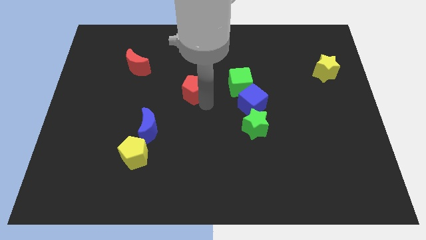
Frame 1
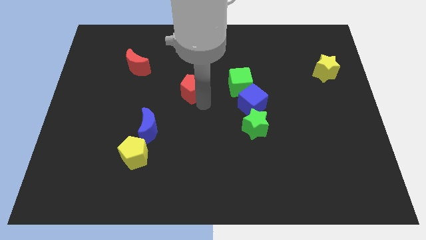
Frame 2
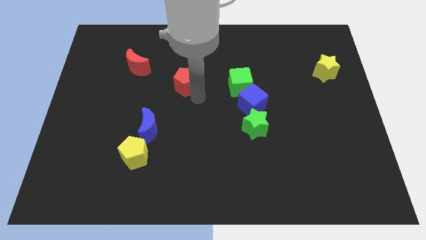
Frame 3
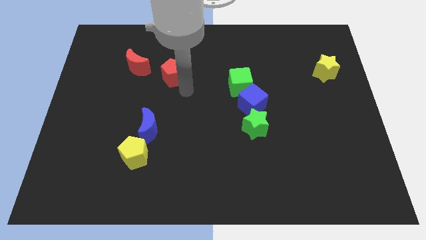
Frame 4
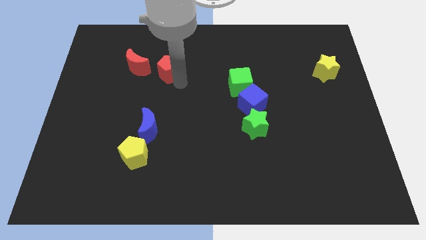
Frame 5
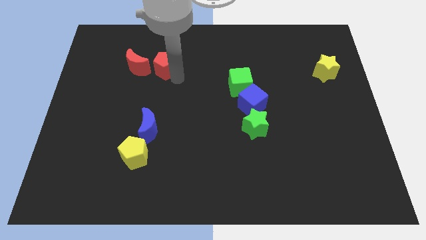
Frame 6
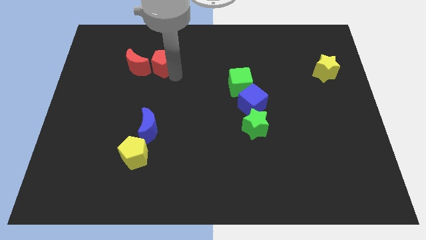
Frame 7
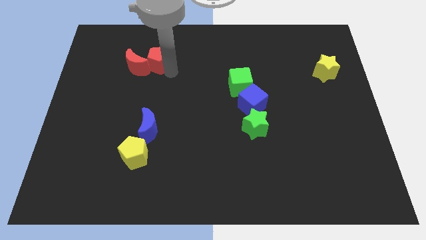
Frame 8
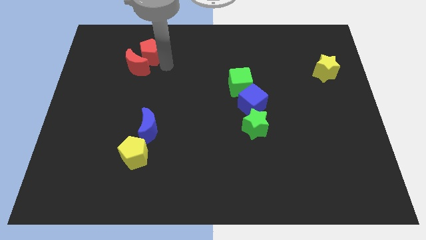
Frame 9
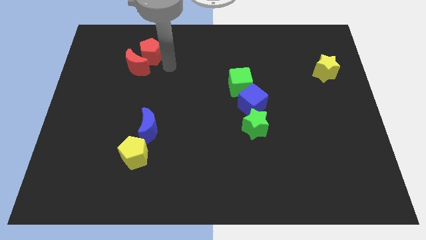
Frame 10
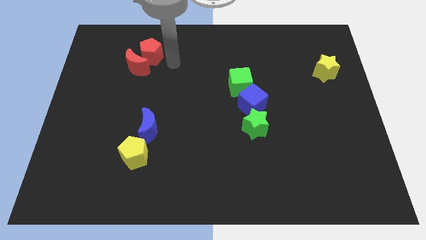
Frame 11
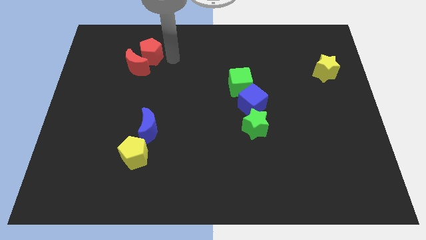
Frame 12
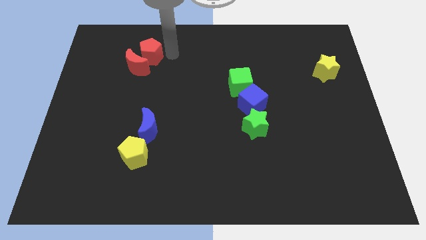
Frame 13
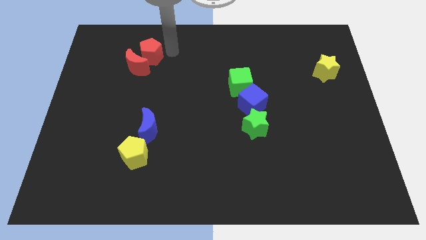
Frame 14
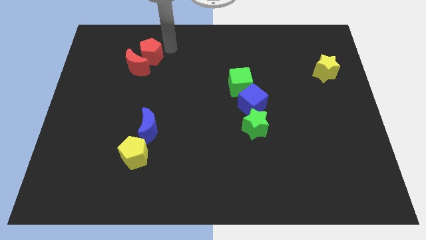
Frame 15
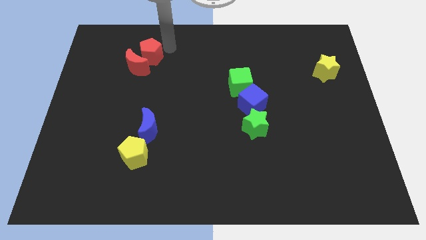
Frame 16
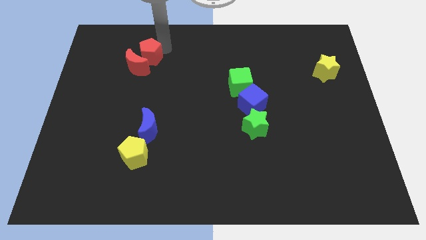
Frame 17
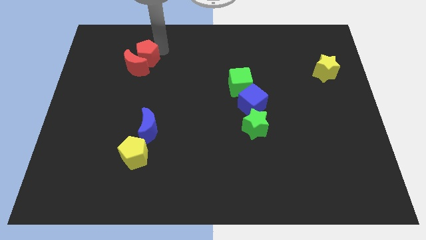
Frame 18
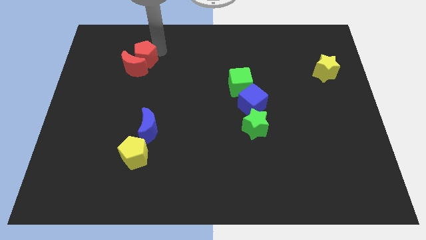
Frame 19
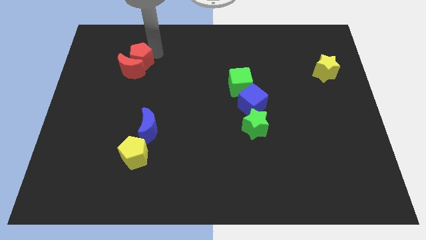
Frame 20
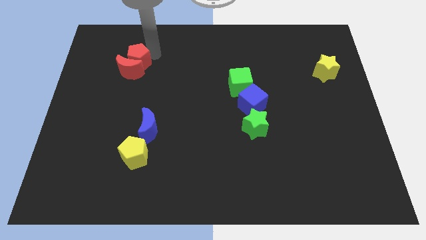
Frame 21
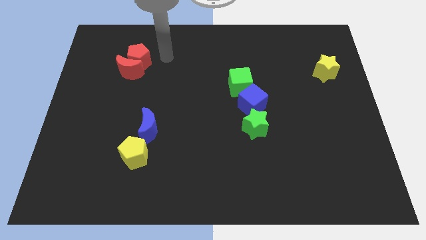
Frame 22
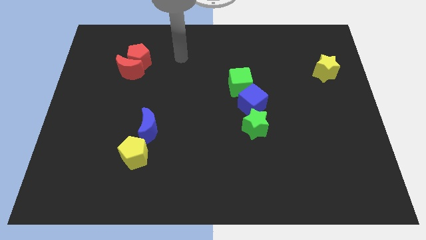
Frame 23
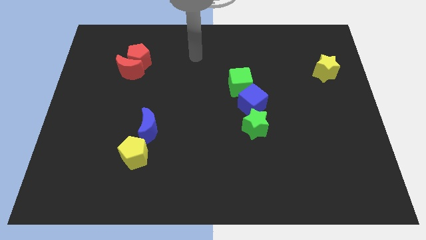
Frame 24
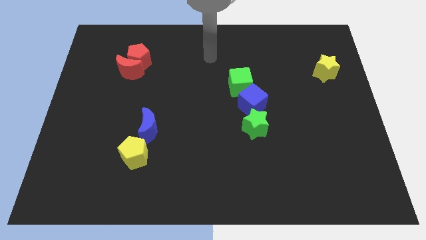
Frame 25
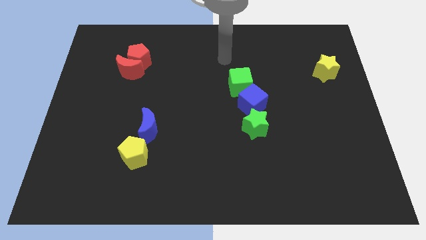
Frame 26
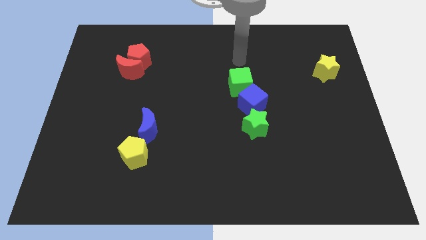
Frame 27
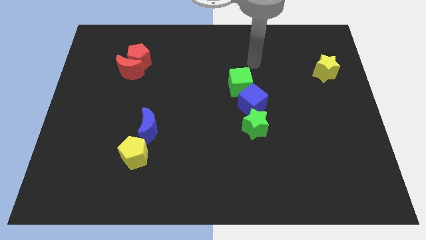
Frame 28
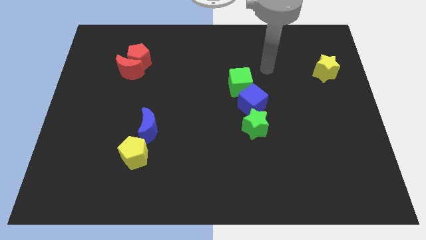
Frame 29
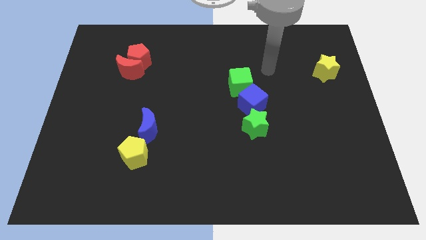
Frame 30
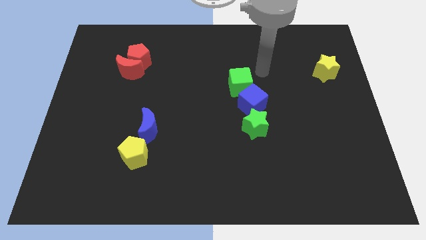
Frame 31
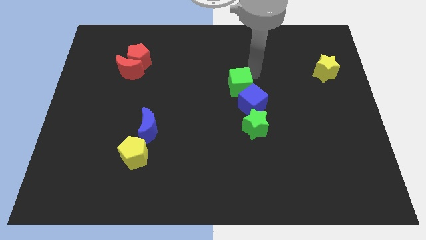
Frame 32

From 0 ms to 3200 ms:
put the red pentagon vertically above the red moon

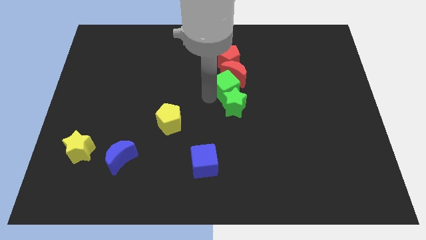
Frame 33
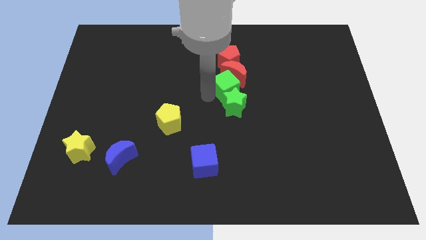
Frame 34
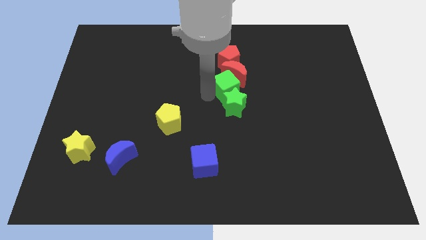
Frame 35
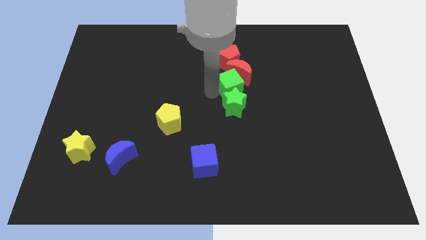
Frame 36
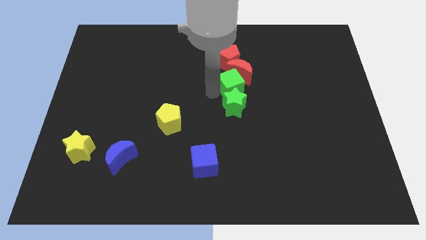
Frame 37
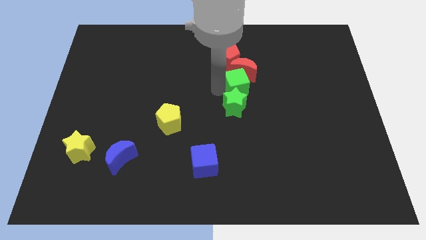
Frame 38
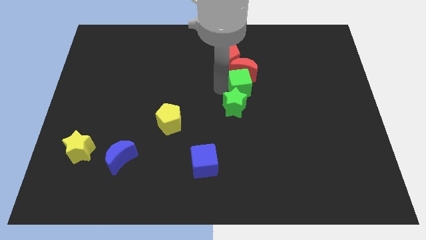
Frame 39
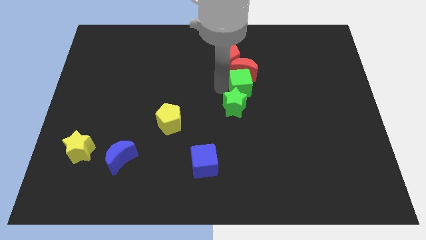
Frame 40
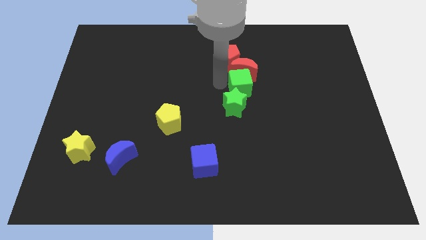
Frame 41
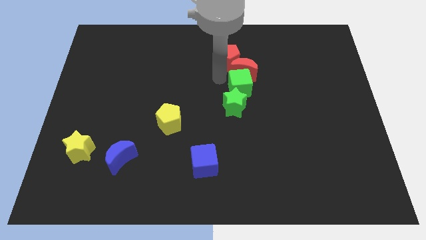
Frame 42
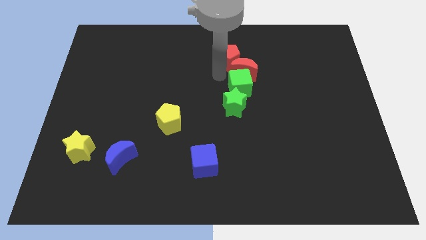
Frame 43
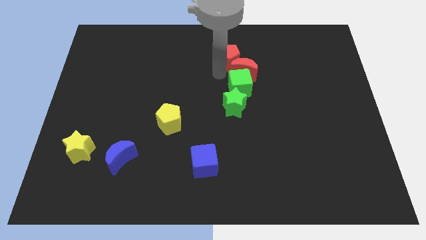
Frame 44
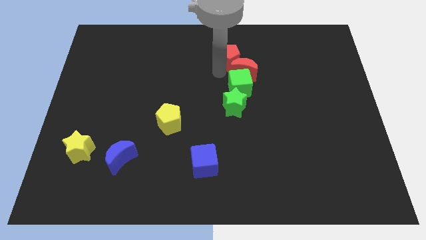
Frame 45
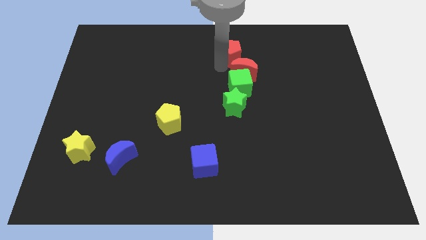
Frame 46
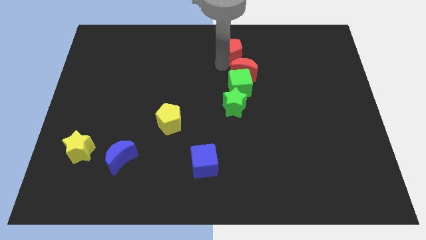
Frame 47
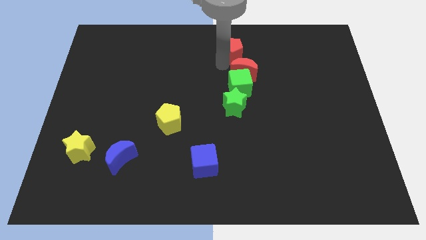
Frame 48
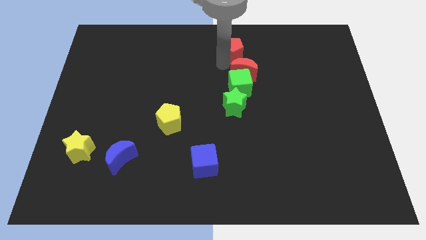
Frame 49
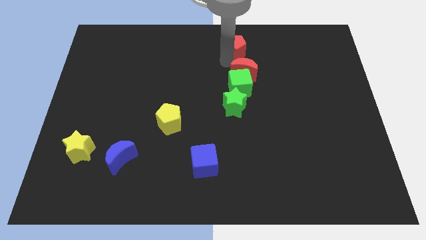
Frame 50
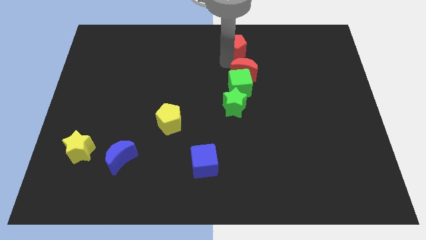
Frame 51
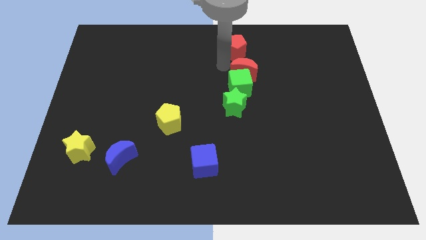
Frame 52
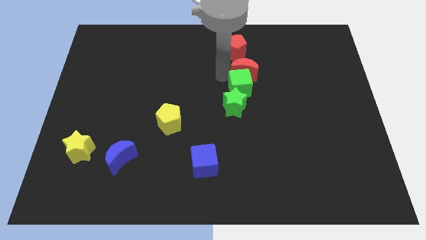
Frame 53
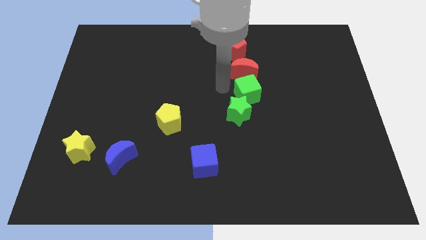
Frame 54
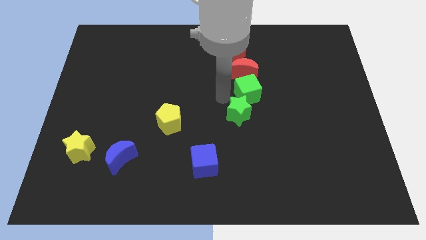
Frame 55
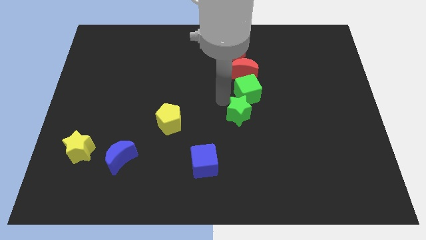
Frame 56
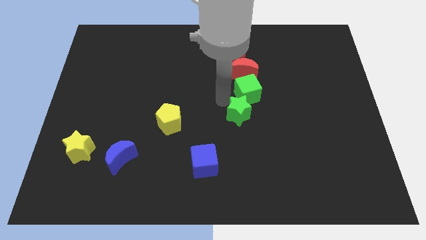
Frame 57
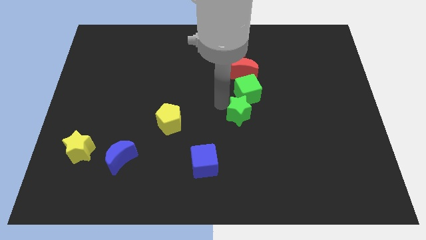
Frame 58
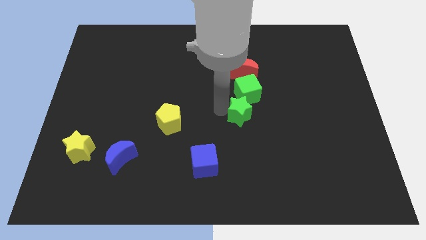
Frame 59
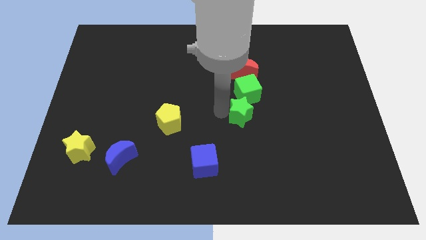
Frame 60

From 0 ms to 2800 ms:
move the red pentagon slightly

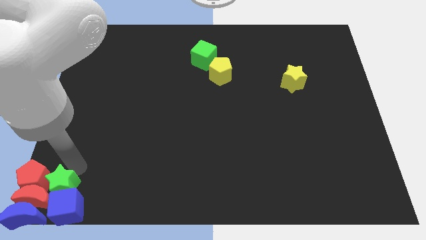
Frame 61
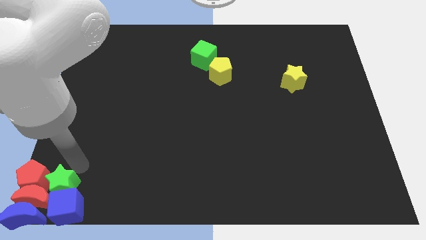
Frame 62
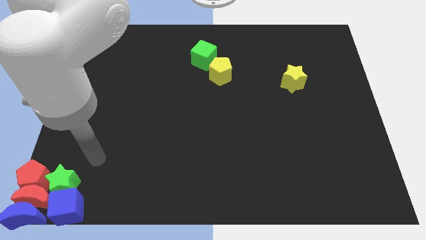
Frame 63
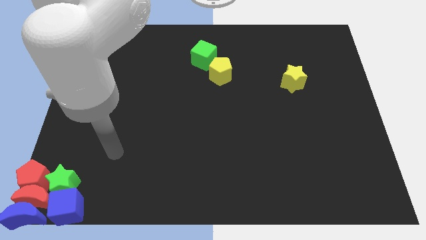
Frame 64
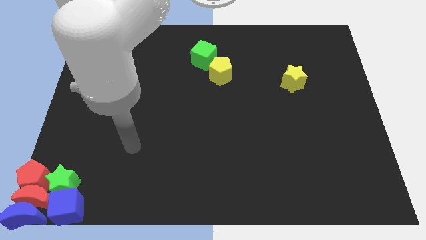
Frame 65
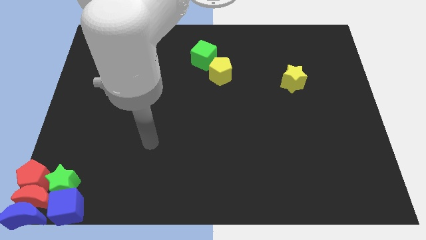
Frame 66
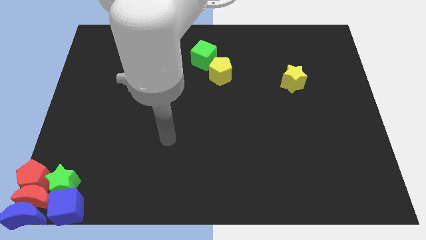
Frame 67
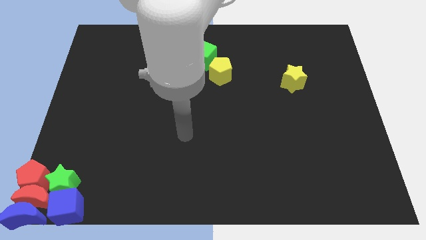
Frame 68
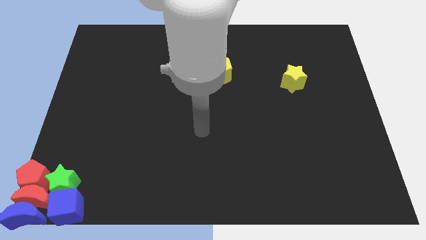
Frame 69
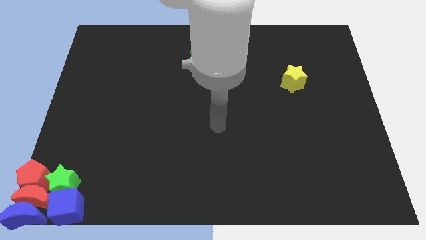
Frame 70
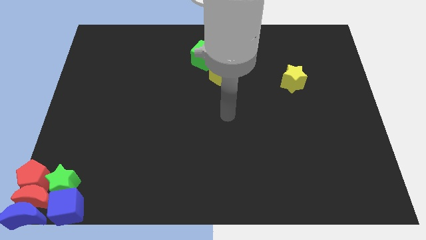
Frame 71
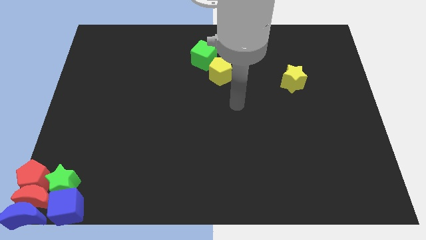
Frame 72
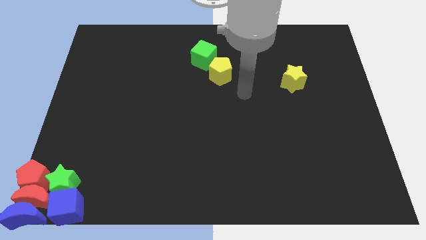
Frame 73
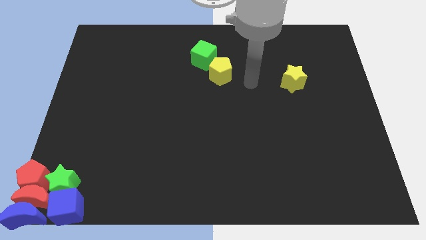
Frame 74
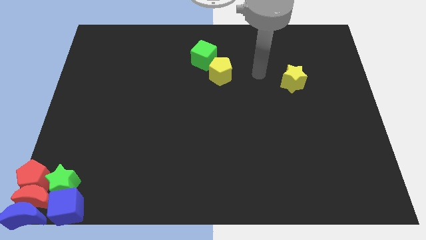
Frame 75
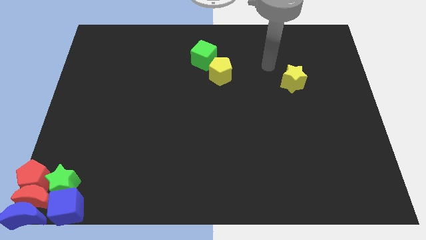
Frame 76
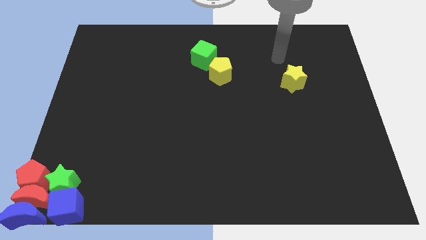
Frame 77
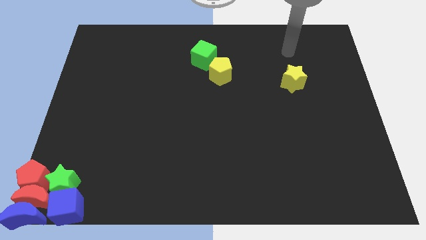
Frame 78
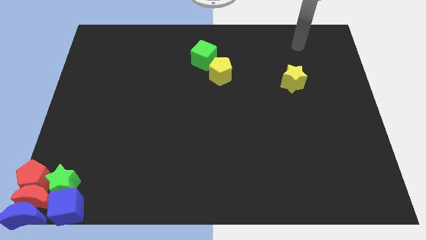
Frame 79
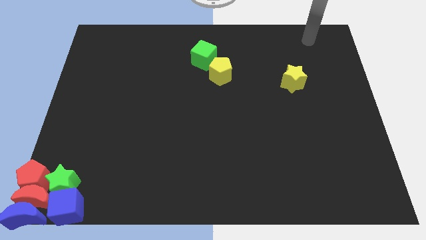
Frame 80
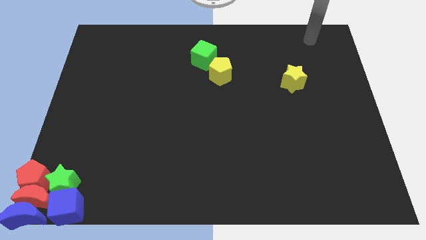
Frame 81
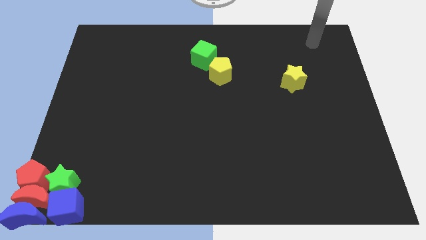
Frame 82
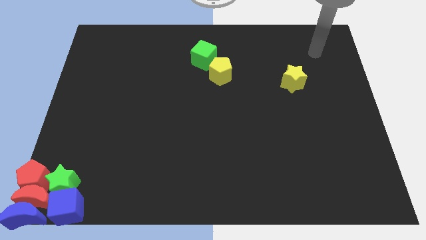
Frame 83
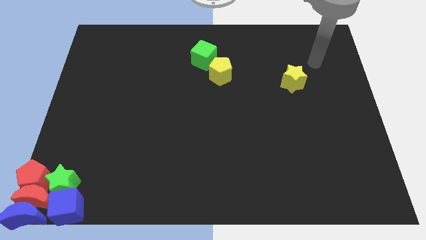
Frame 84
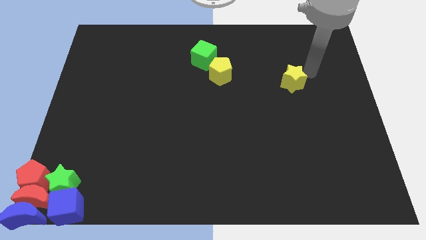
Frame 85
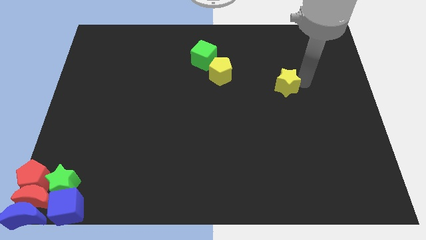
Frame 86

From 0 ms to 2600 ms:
move the arm away from the green star

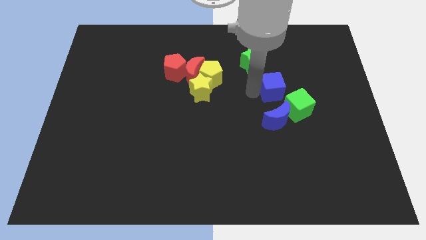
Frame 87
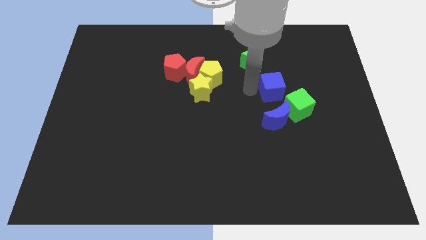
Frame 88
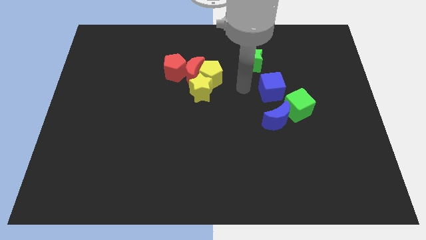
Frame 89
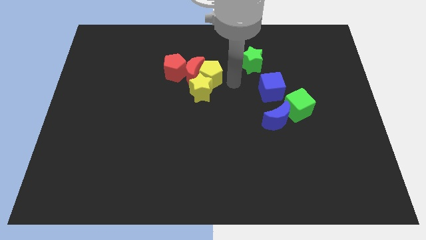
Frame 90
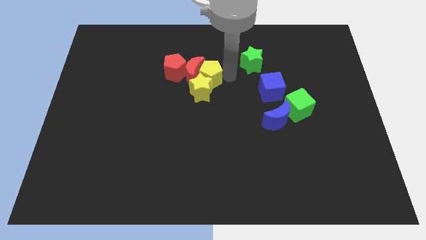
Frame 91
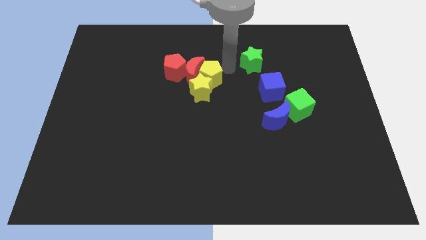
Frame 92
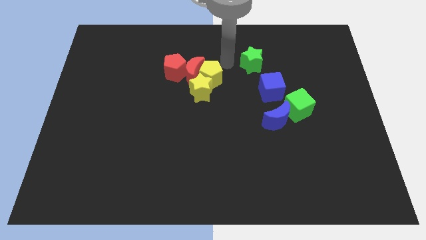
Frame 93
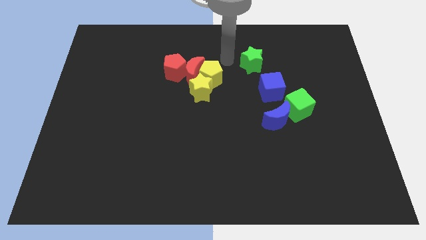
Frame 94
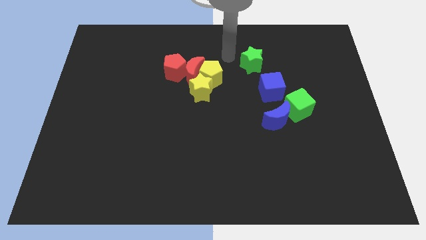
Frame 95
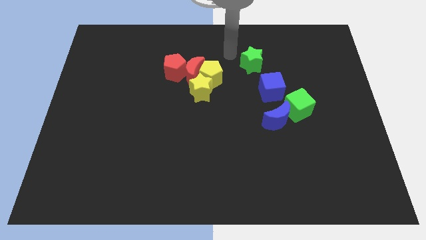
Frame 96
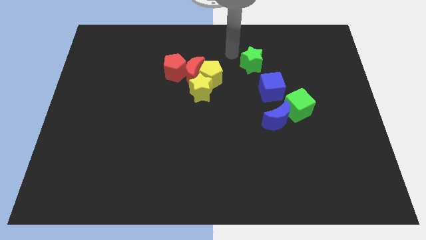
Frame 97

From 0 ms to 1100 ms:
take your arm away from the left side of the blue cube
